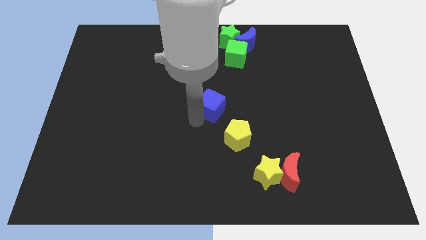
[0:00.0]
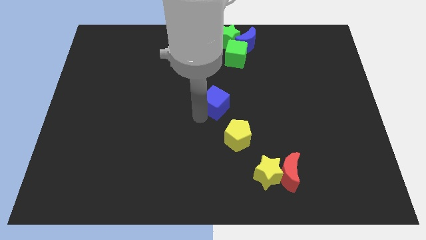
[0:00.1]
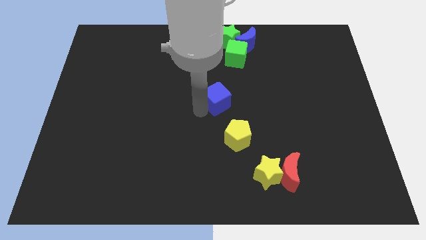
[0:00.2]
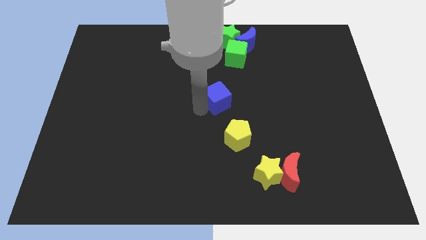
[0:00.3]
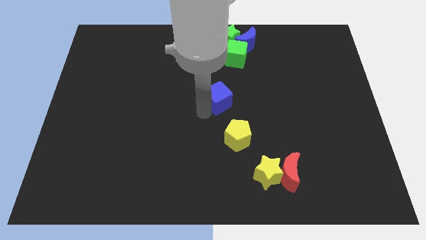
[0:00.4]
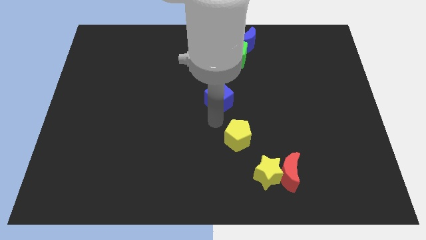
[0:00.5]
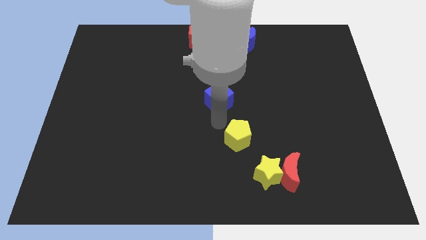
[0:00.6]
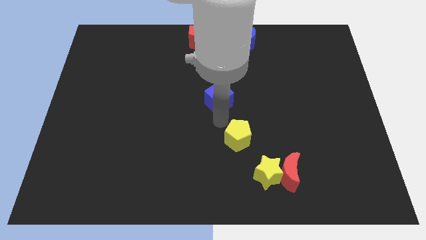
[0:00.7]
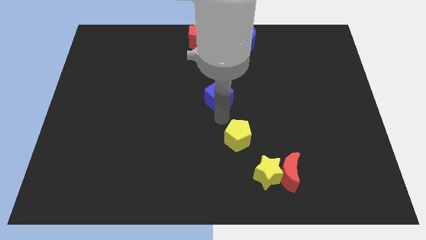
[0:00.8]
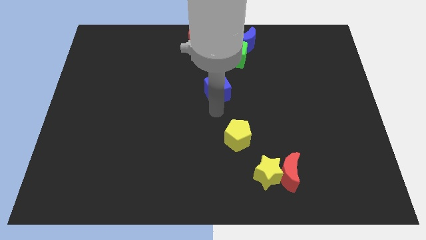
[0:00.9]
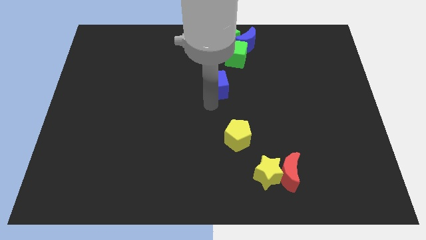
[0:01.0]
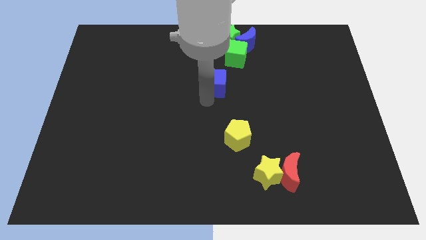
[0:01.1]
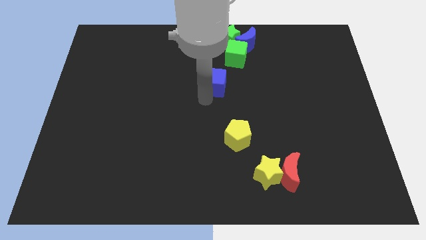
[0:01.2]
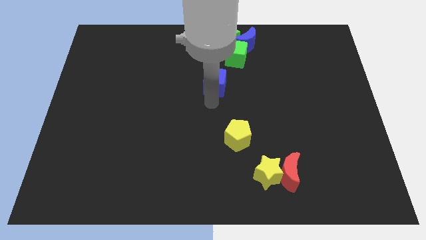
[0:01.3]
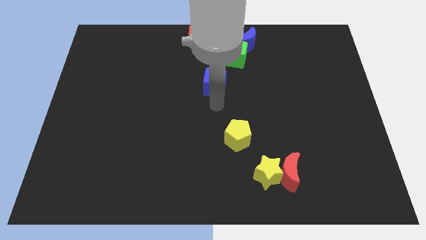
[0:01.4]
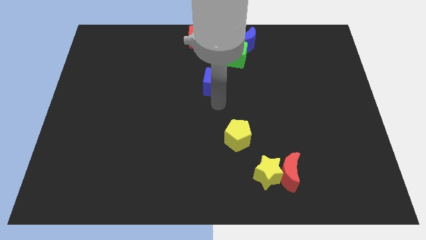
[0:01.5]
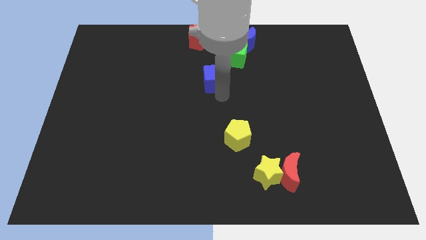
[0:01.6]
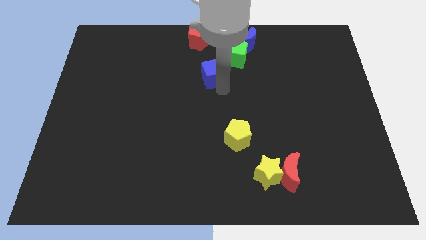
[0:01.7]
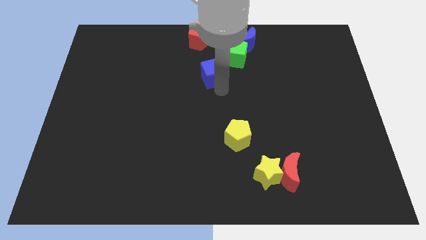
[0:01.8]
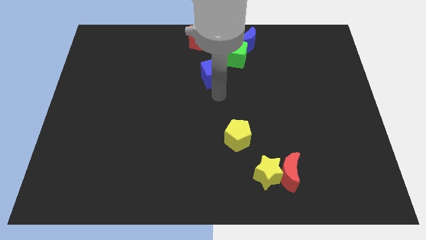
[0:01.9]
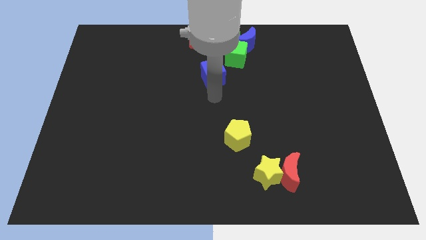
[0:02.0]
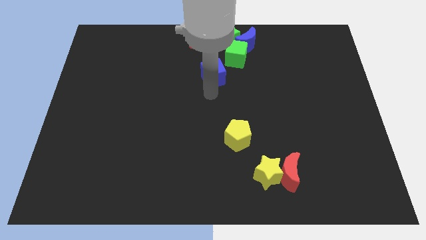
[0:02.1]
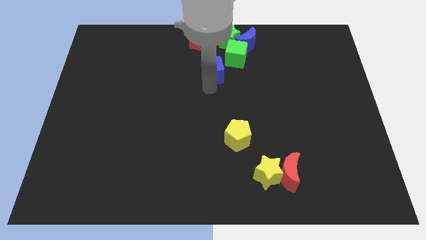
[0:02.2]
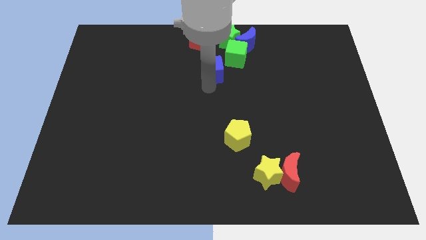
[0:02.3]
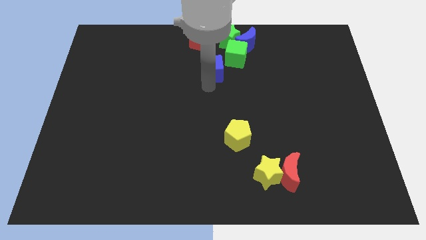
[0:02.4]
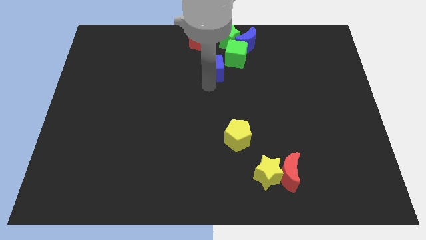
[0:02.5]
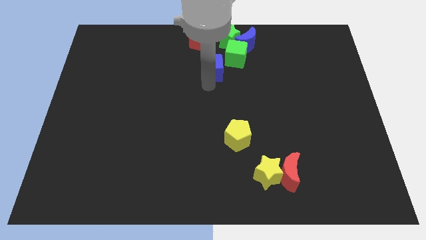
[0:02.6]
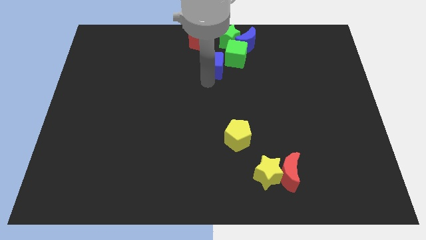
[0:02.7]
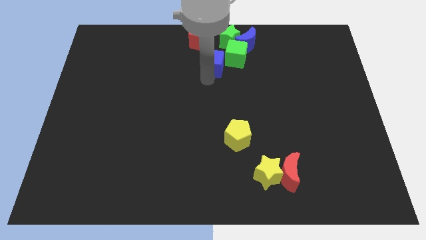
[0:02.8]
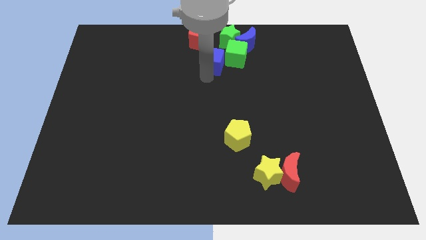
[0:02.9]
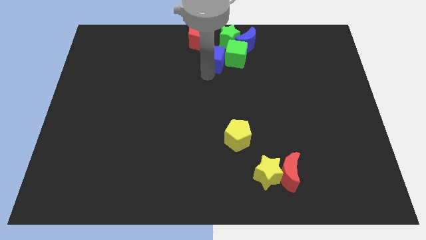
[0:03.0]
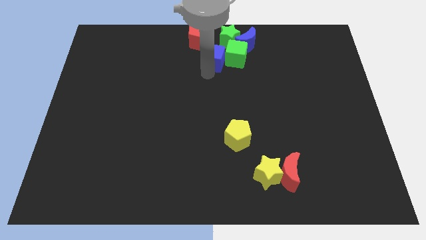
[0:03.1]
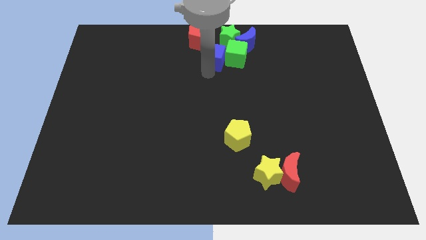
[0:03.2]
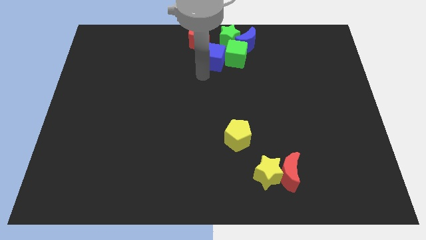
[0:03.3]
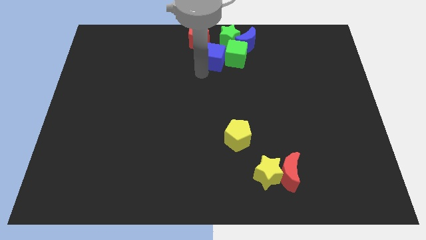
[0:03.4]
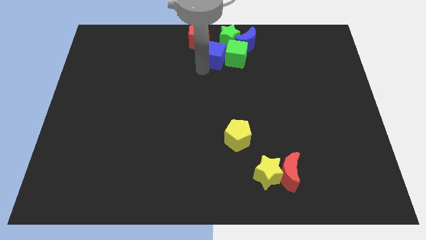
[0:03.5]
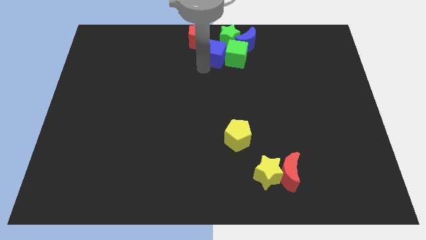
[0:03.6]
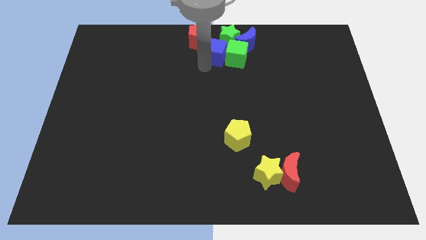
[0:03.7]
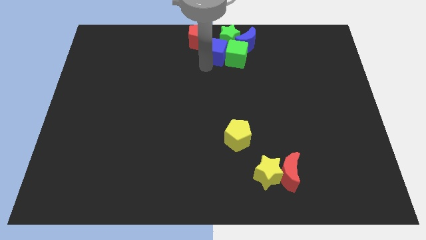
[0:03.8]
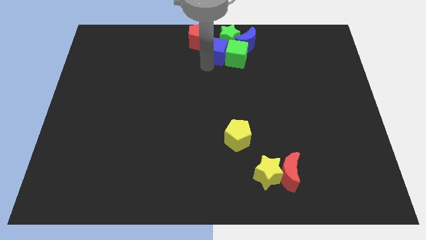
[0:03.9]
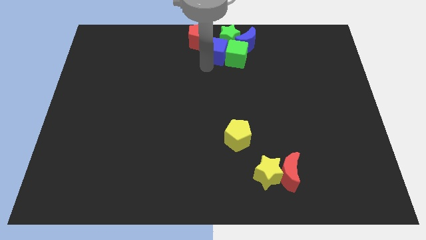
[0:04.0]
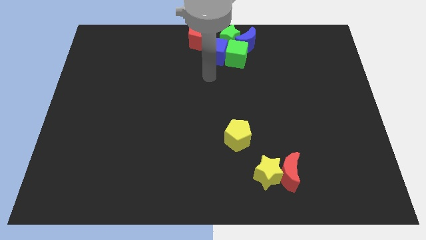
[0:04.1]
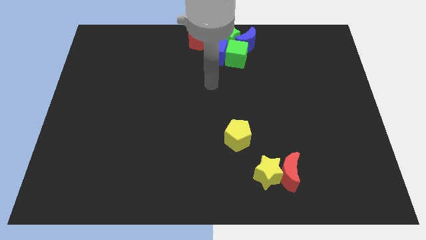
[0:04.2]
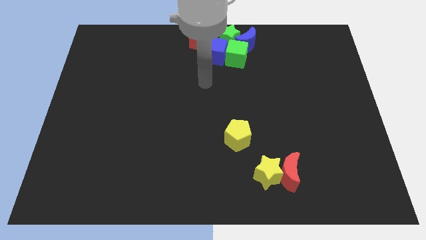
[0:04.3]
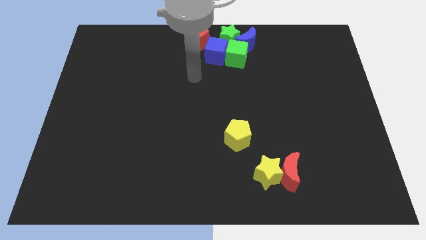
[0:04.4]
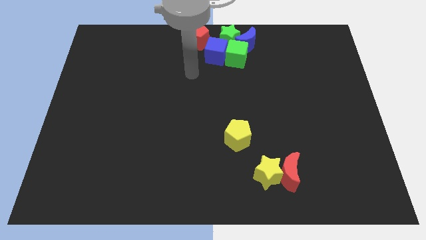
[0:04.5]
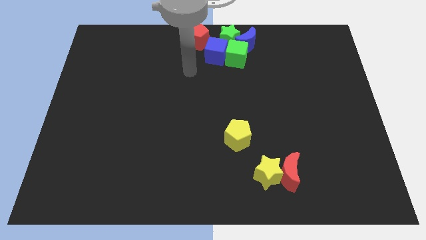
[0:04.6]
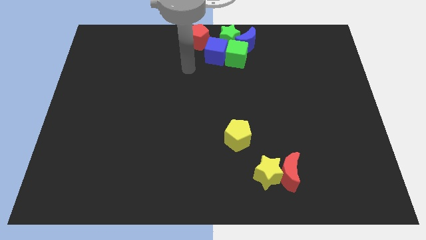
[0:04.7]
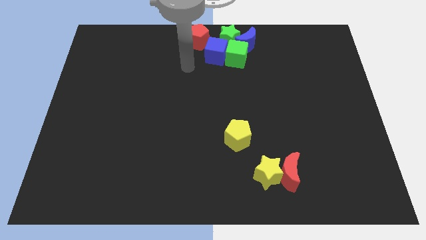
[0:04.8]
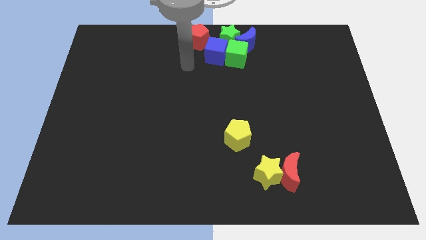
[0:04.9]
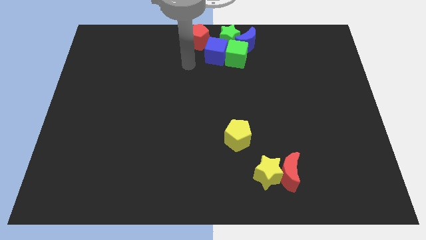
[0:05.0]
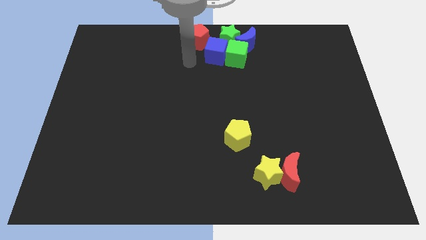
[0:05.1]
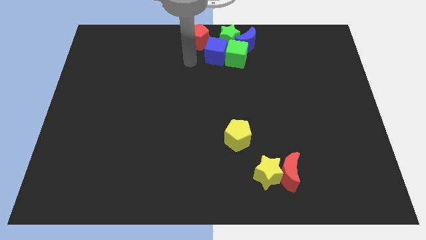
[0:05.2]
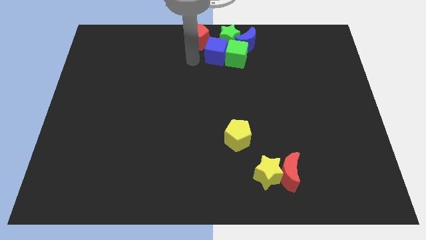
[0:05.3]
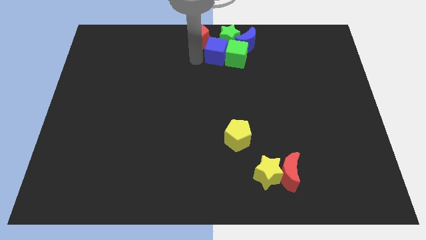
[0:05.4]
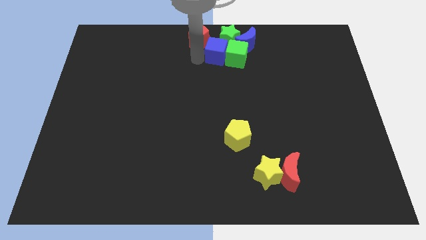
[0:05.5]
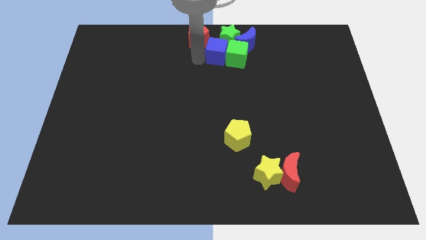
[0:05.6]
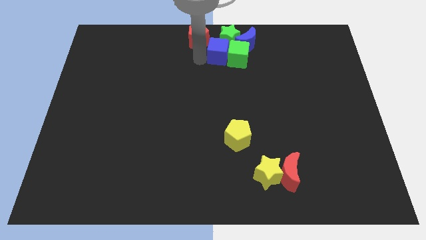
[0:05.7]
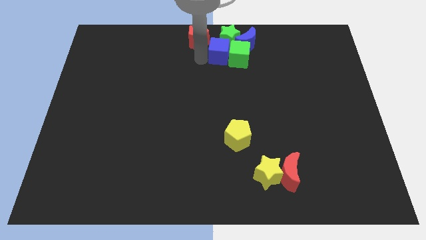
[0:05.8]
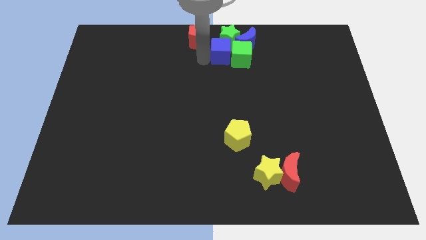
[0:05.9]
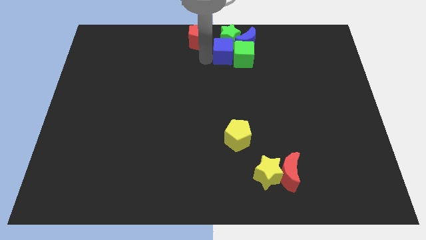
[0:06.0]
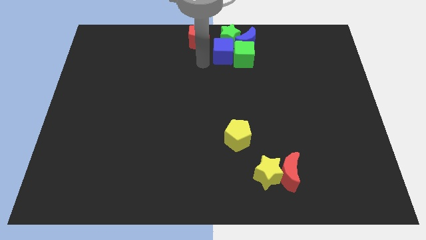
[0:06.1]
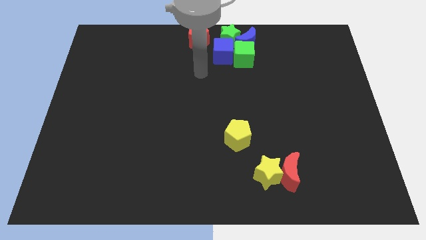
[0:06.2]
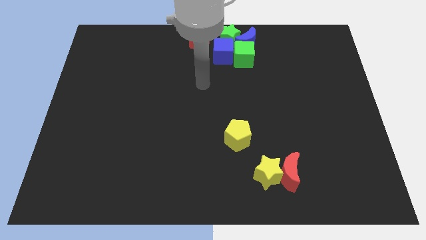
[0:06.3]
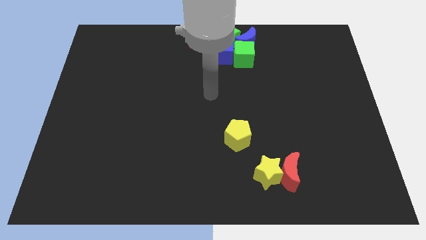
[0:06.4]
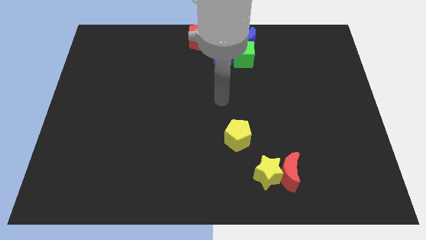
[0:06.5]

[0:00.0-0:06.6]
add the blue cube to the group of blocks

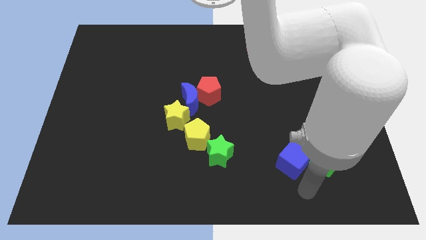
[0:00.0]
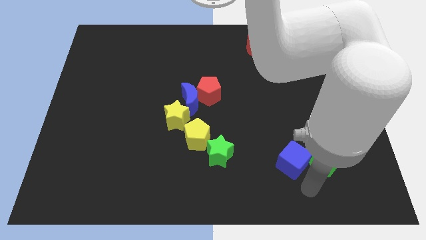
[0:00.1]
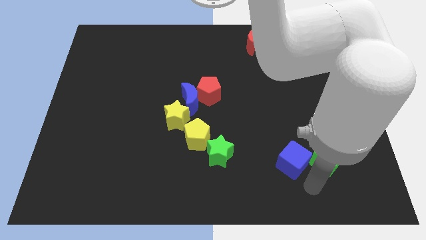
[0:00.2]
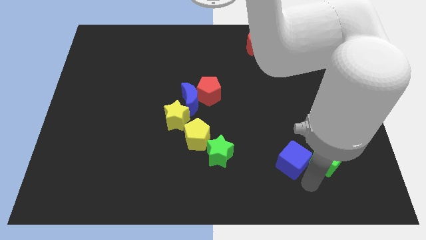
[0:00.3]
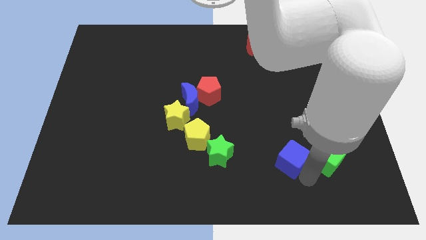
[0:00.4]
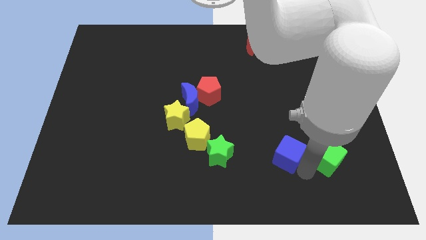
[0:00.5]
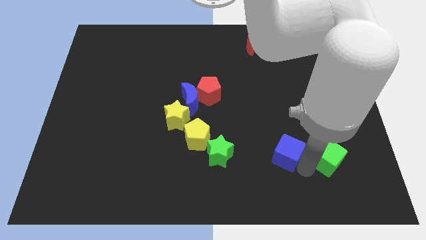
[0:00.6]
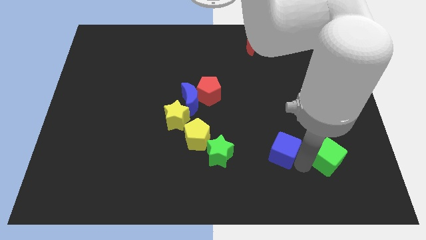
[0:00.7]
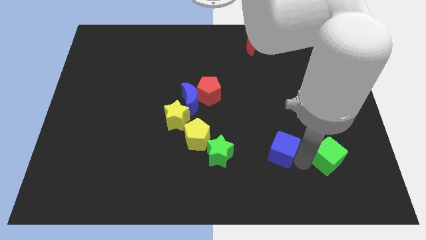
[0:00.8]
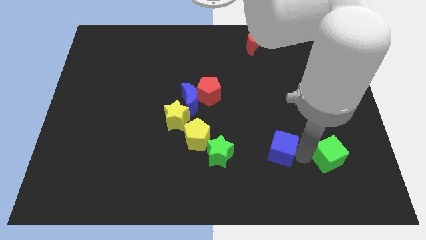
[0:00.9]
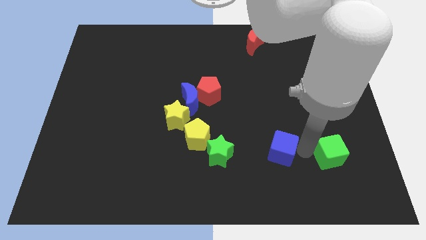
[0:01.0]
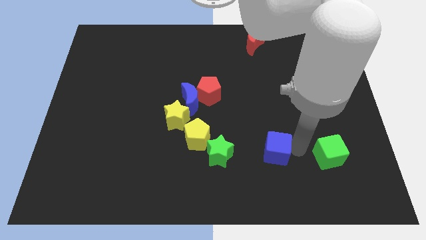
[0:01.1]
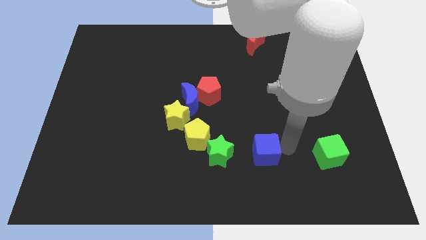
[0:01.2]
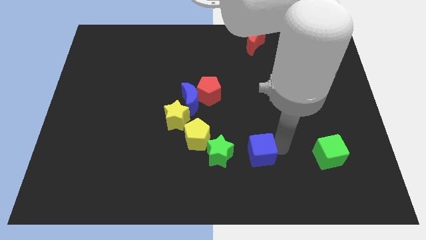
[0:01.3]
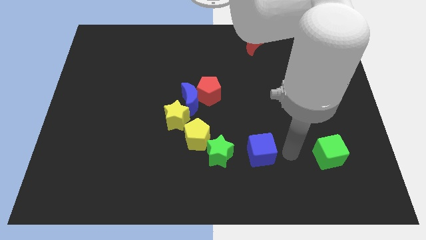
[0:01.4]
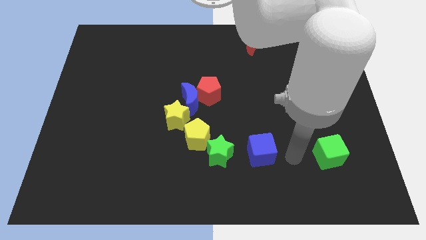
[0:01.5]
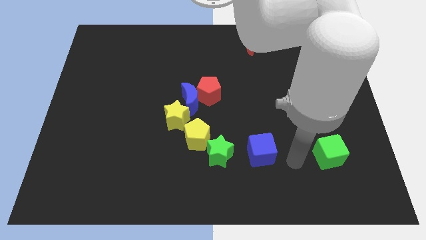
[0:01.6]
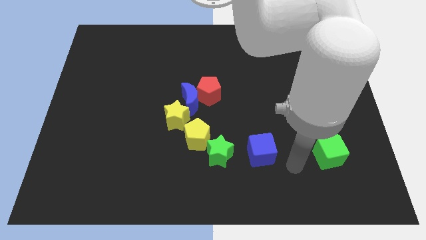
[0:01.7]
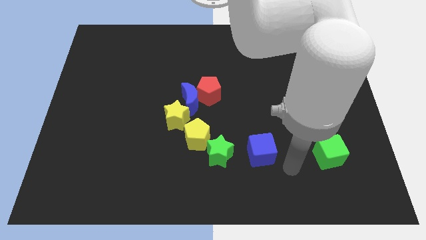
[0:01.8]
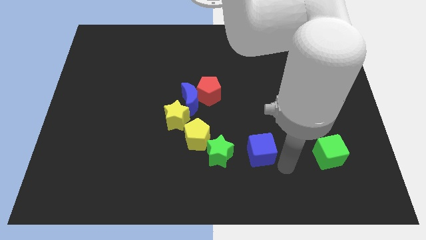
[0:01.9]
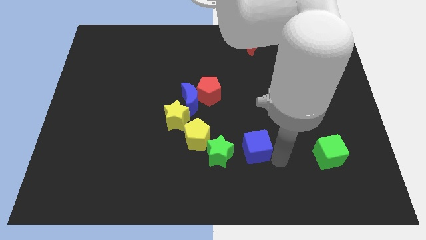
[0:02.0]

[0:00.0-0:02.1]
move the blue cube to the right side of the green star

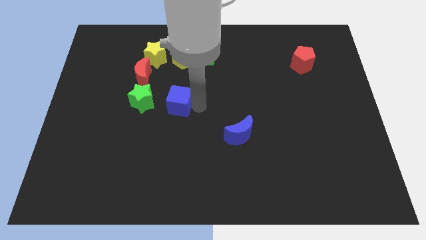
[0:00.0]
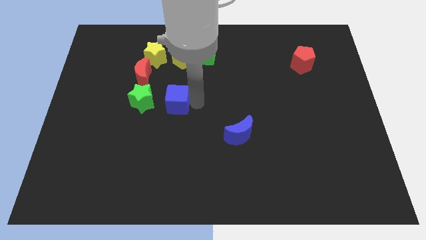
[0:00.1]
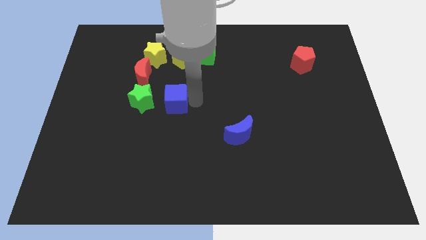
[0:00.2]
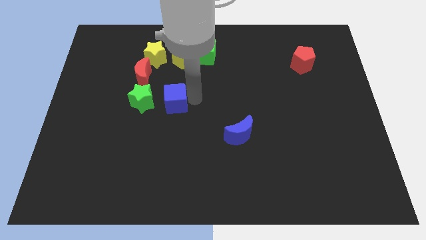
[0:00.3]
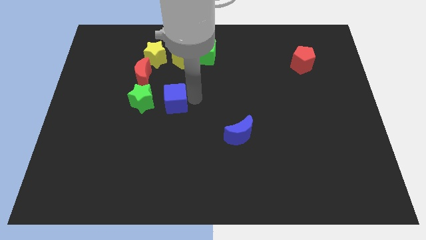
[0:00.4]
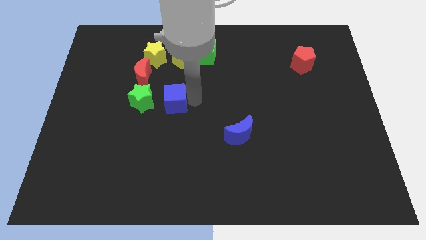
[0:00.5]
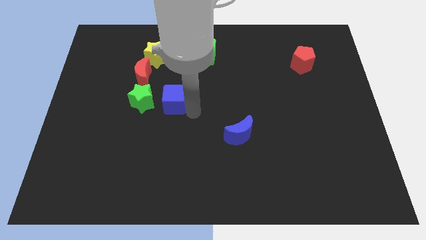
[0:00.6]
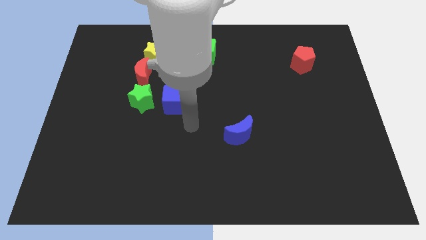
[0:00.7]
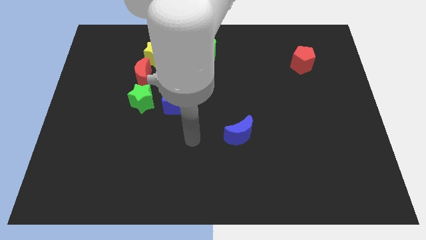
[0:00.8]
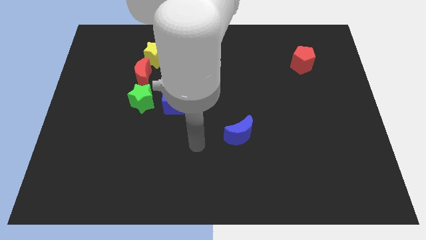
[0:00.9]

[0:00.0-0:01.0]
place blue cube adjacent to green star
